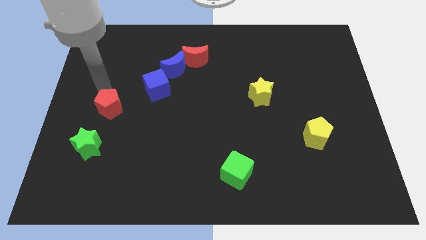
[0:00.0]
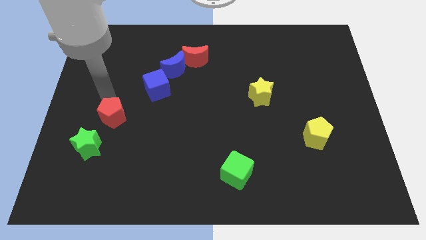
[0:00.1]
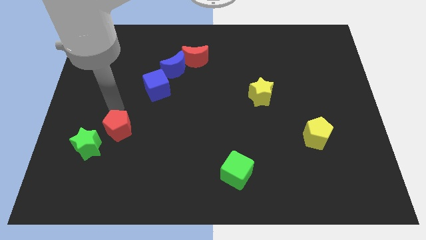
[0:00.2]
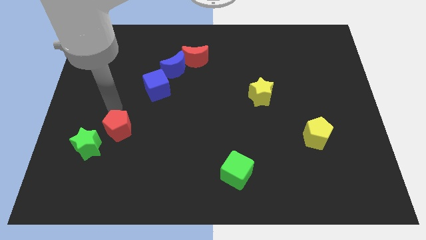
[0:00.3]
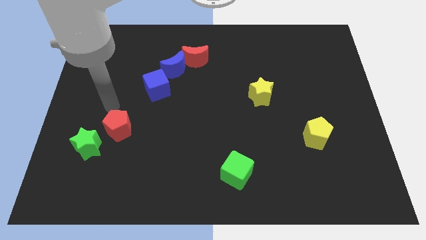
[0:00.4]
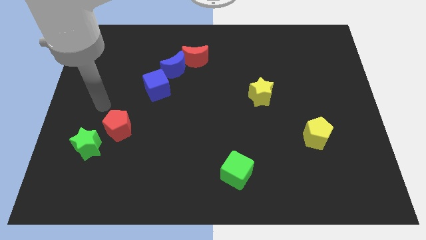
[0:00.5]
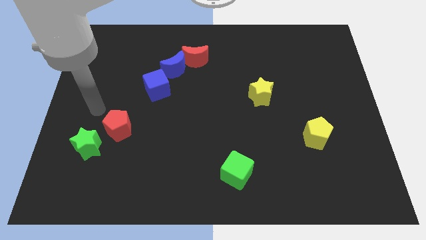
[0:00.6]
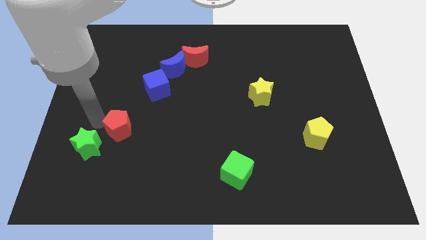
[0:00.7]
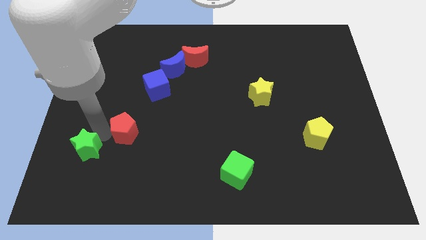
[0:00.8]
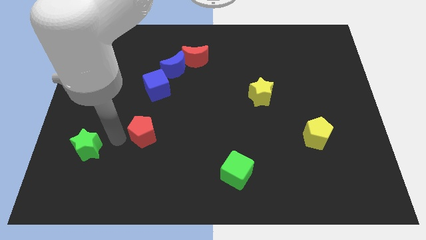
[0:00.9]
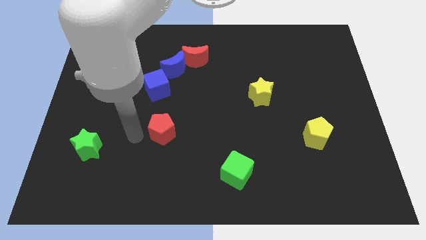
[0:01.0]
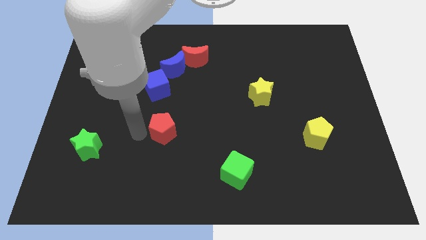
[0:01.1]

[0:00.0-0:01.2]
move the red pentagon to the bottom of the blue cube

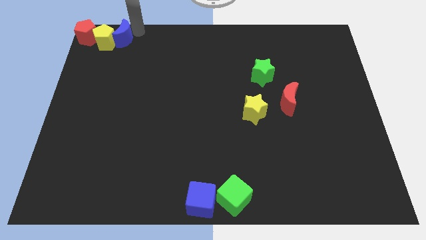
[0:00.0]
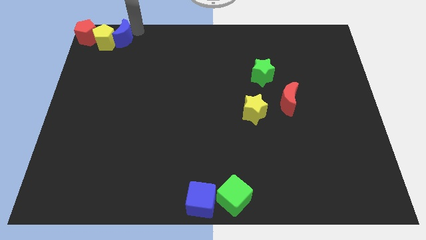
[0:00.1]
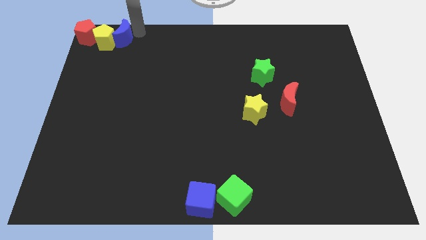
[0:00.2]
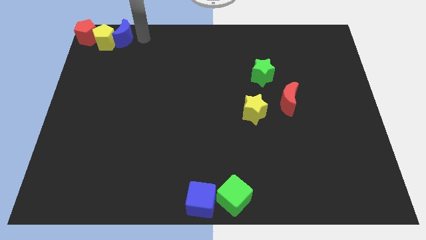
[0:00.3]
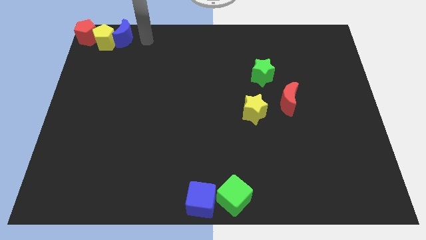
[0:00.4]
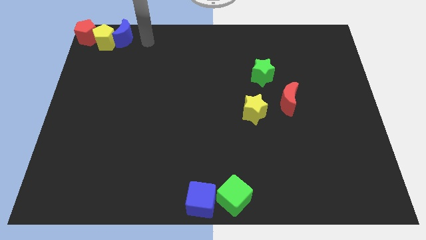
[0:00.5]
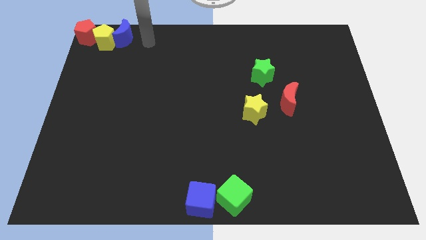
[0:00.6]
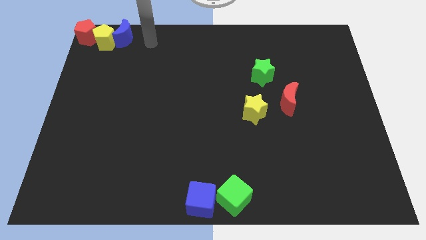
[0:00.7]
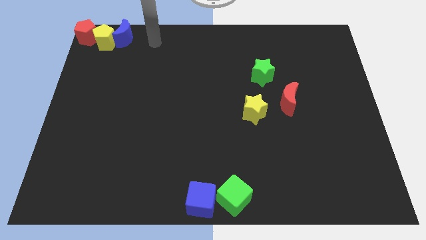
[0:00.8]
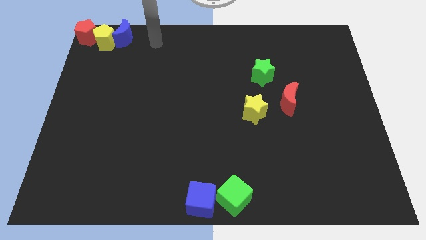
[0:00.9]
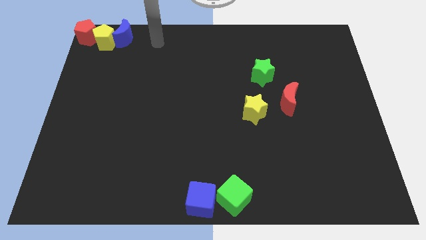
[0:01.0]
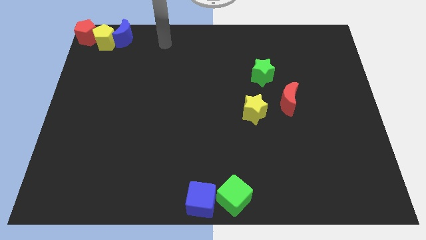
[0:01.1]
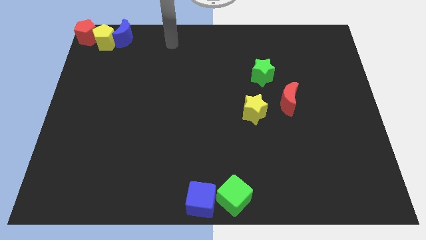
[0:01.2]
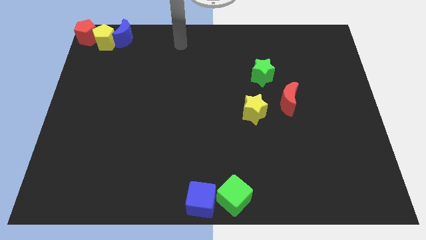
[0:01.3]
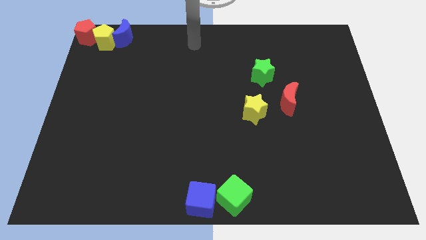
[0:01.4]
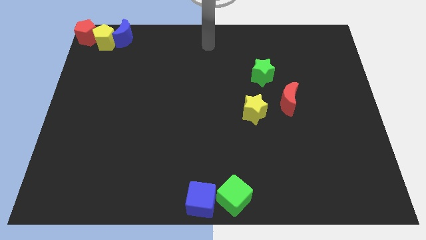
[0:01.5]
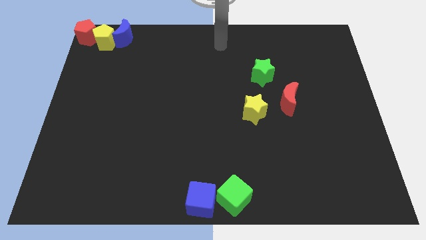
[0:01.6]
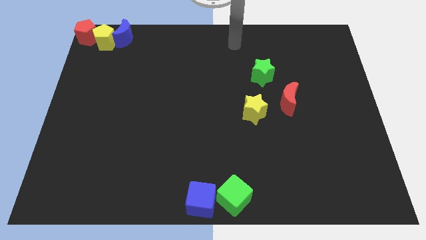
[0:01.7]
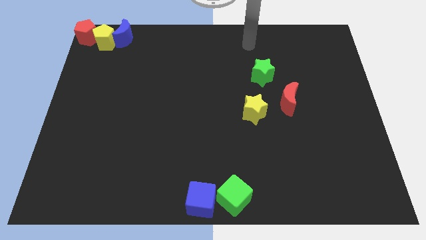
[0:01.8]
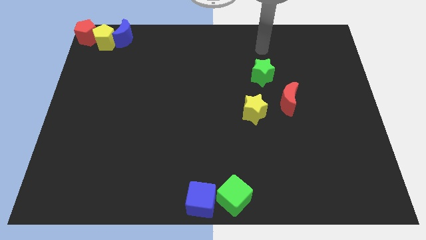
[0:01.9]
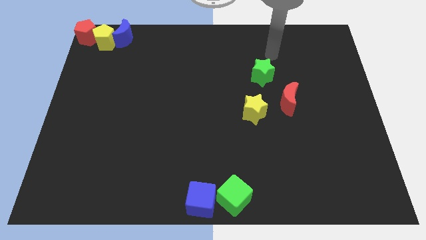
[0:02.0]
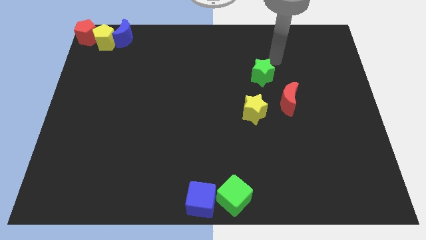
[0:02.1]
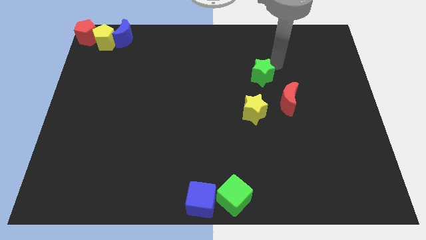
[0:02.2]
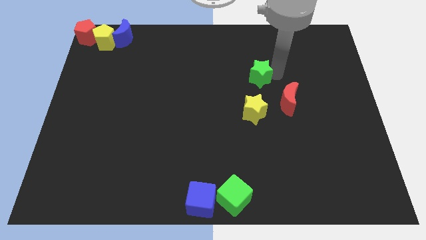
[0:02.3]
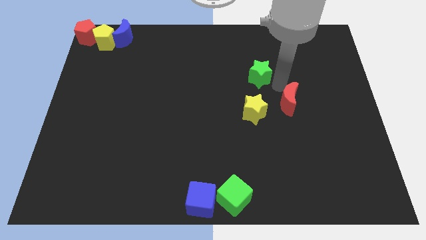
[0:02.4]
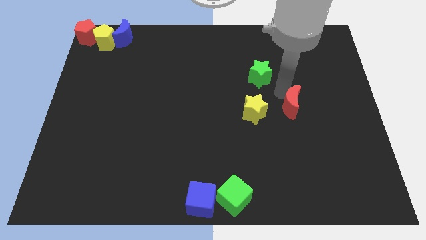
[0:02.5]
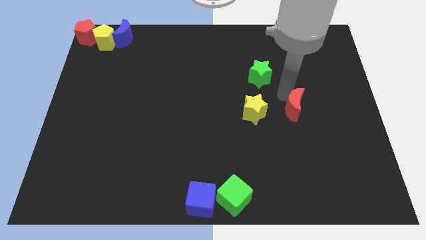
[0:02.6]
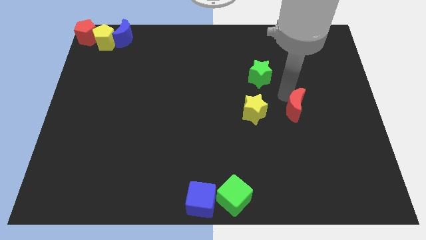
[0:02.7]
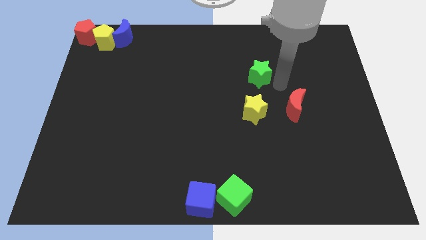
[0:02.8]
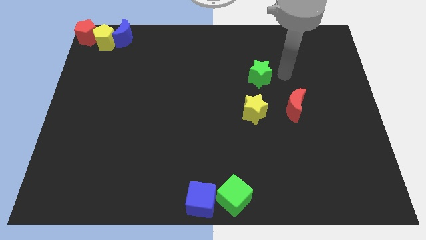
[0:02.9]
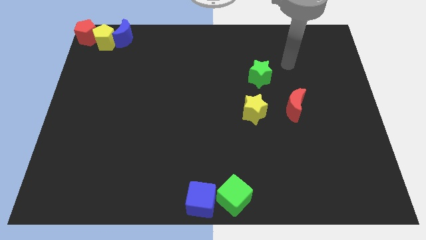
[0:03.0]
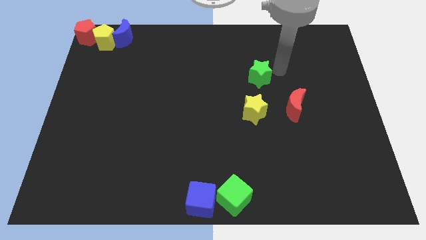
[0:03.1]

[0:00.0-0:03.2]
push the red moon and form a triangle with the green star and yellow star

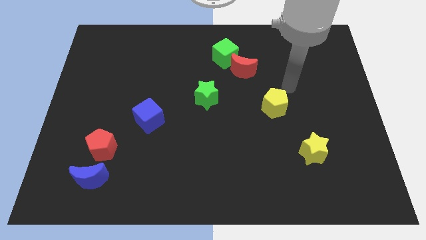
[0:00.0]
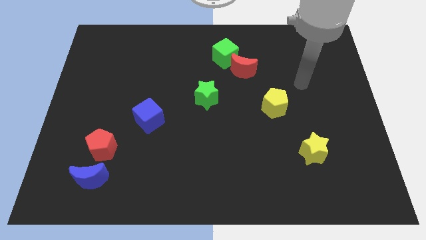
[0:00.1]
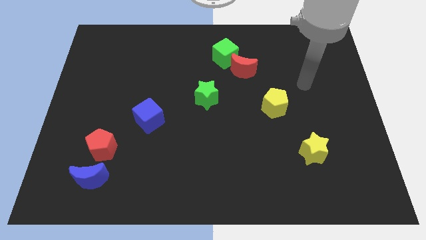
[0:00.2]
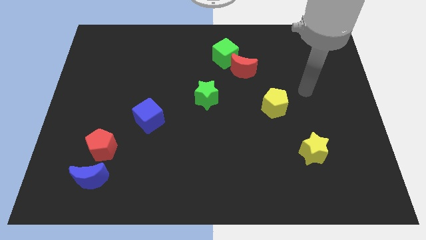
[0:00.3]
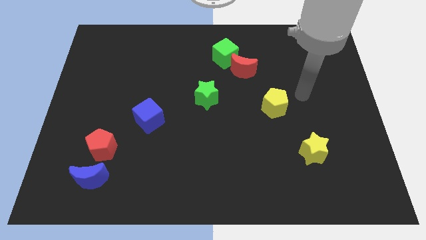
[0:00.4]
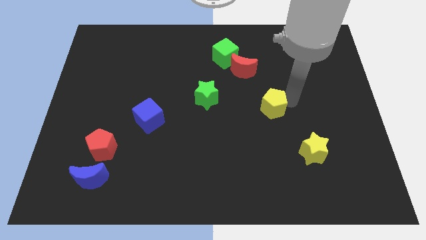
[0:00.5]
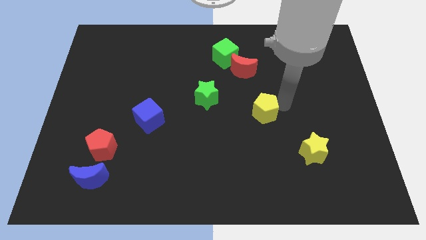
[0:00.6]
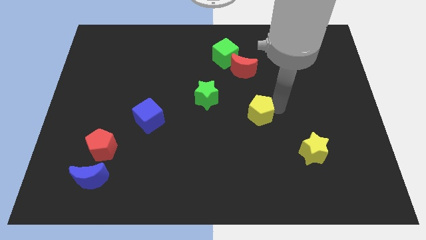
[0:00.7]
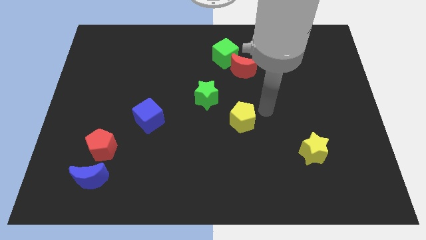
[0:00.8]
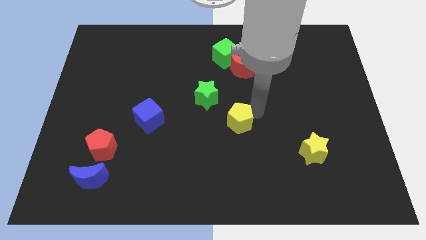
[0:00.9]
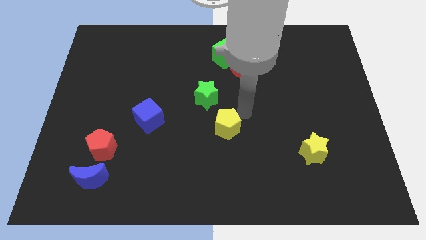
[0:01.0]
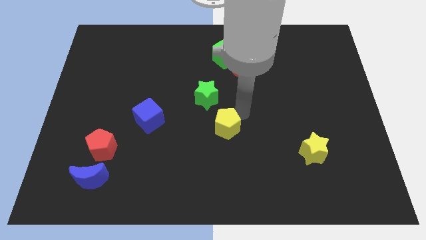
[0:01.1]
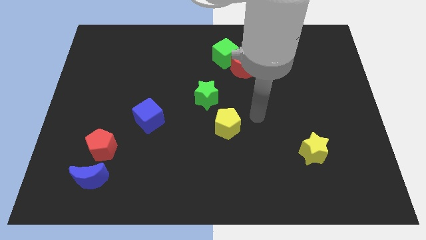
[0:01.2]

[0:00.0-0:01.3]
push the yellow pentagon vertically below the green cube

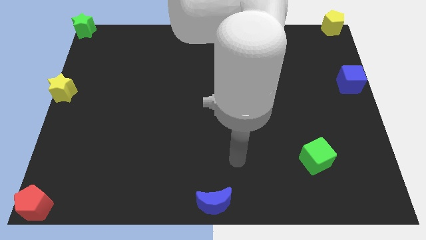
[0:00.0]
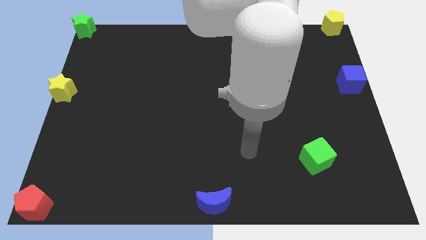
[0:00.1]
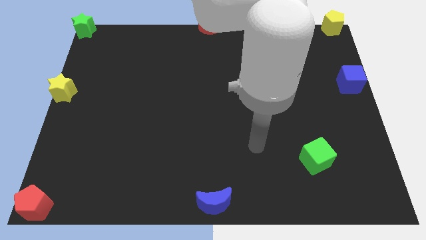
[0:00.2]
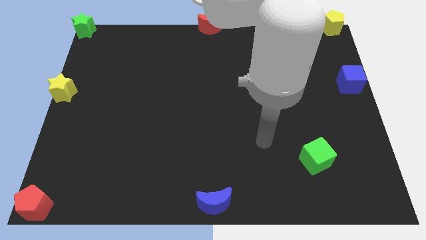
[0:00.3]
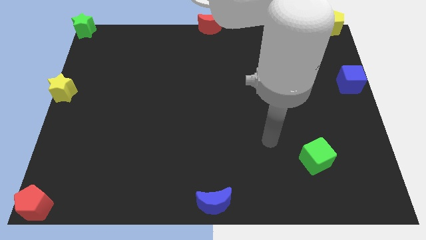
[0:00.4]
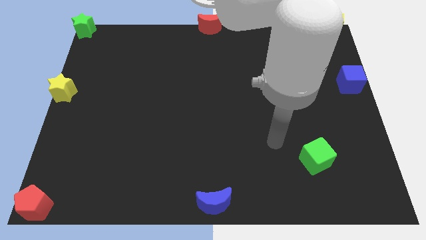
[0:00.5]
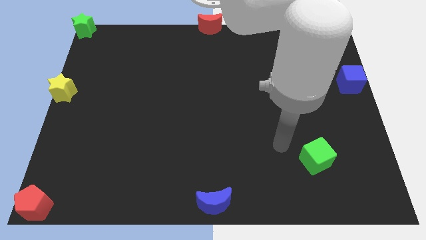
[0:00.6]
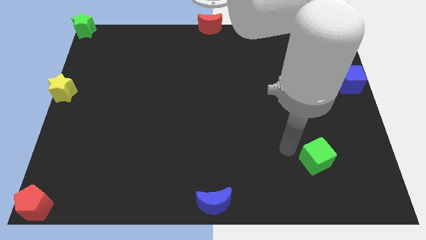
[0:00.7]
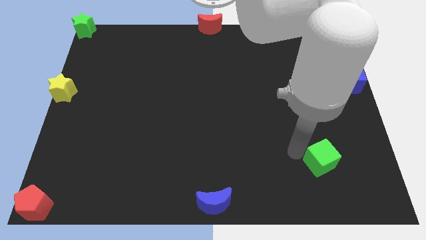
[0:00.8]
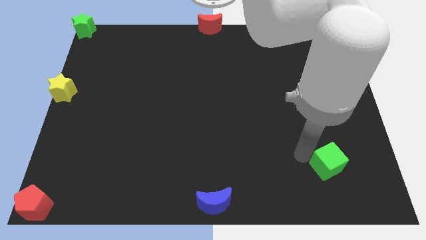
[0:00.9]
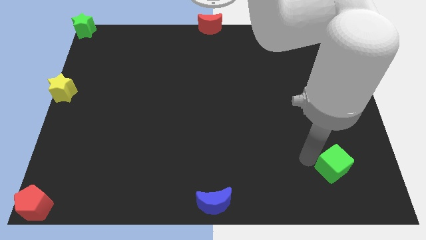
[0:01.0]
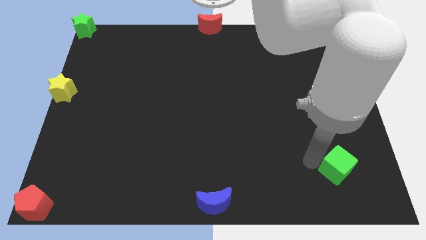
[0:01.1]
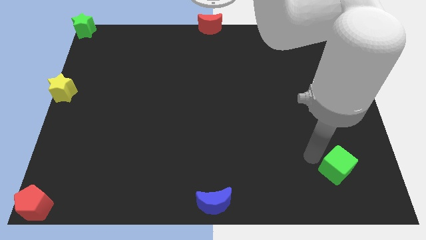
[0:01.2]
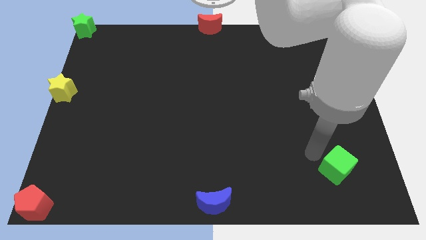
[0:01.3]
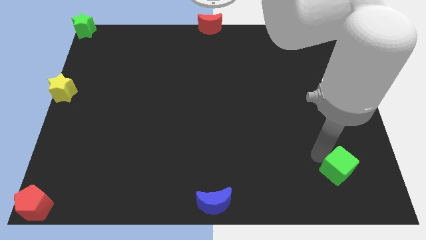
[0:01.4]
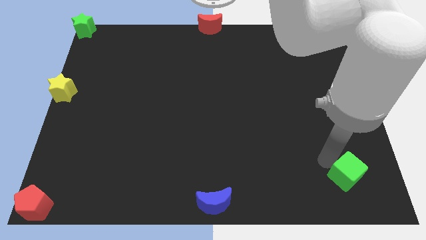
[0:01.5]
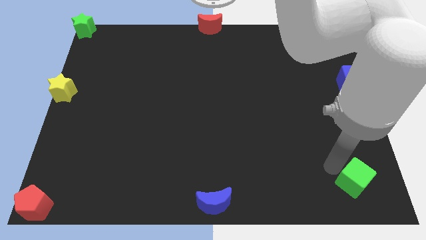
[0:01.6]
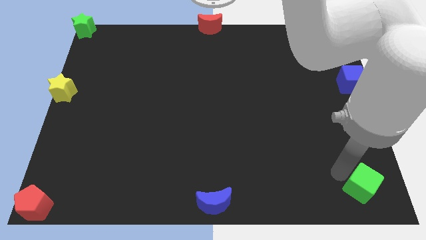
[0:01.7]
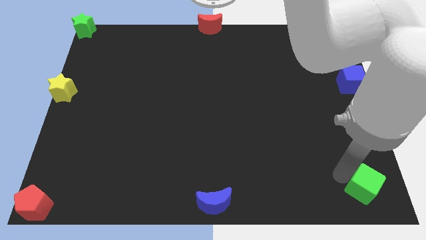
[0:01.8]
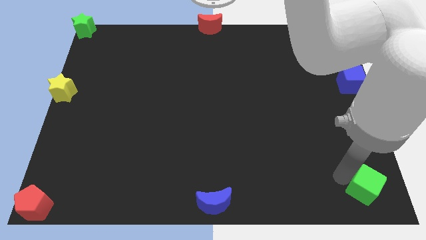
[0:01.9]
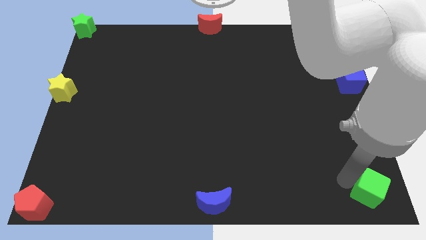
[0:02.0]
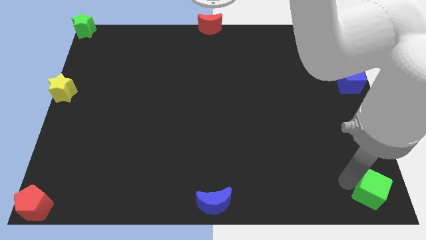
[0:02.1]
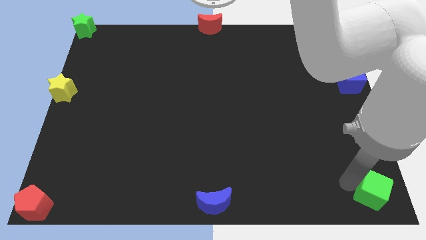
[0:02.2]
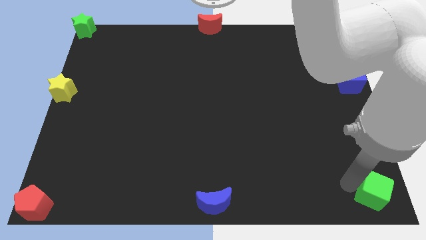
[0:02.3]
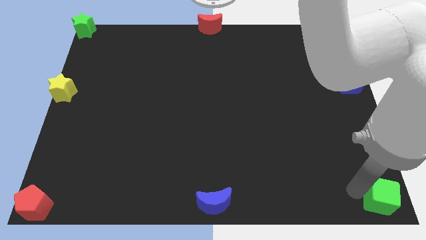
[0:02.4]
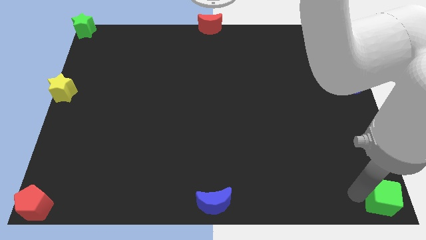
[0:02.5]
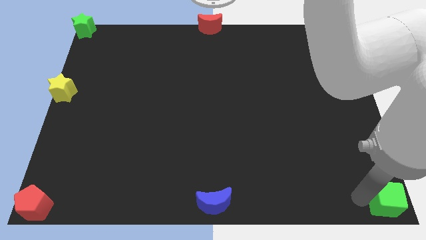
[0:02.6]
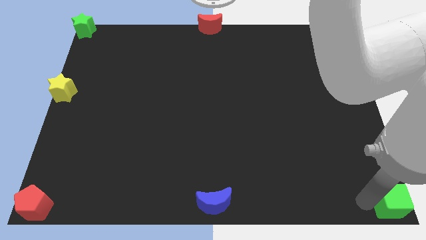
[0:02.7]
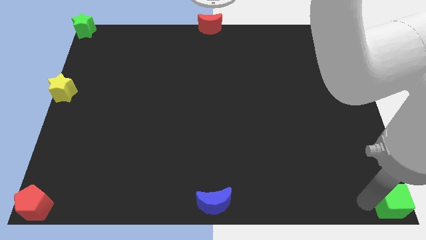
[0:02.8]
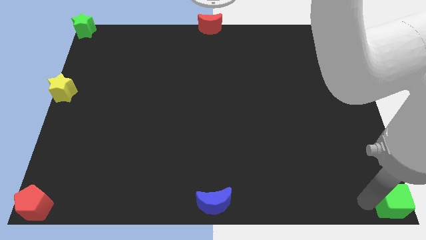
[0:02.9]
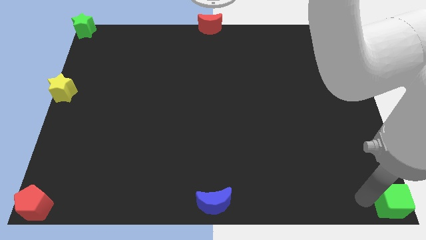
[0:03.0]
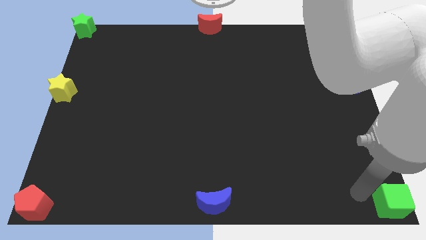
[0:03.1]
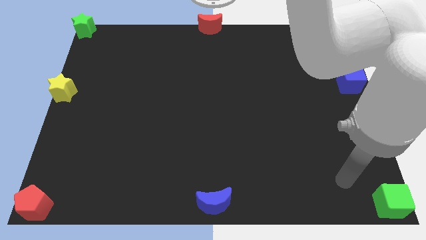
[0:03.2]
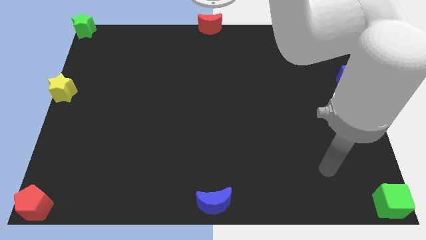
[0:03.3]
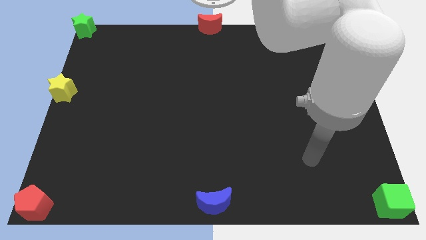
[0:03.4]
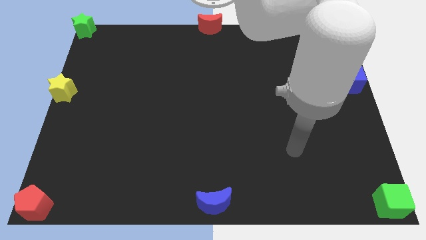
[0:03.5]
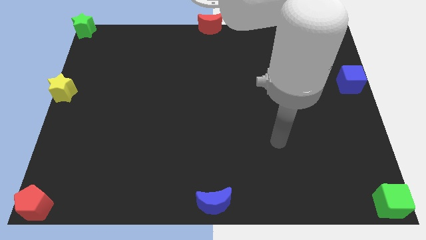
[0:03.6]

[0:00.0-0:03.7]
move green cube to the bottom right corner of the board
